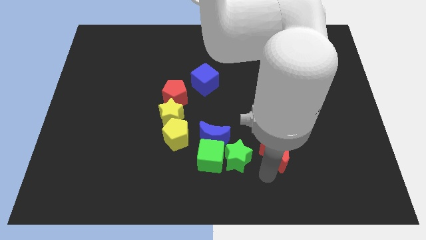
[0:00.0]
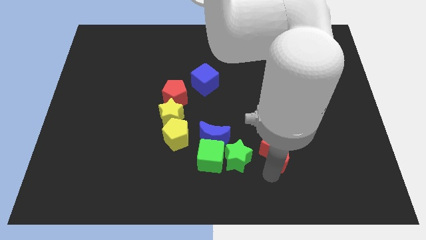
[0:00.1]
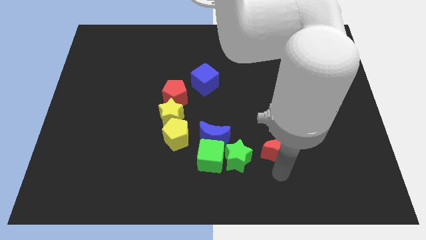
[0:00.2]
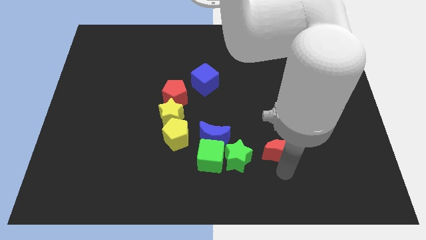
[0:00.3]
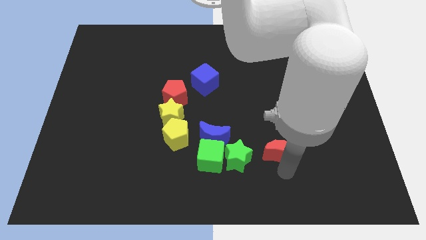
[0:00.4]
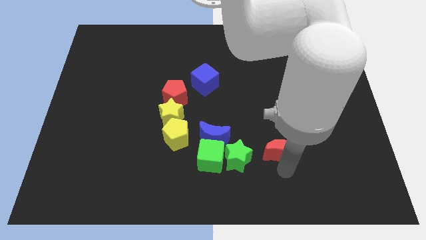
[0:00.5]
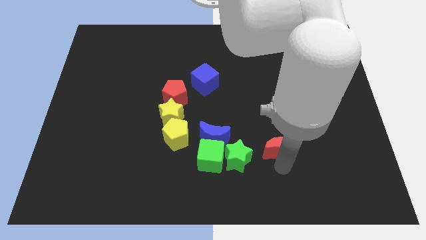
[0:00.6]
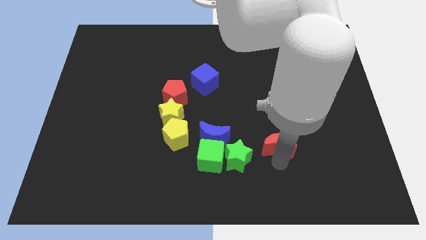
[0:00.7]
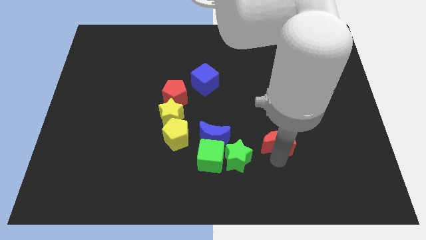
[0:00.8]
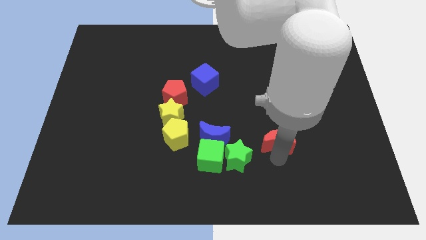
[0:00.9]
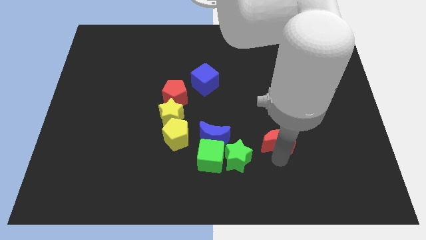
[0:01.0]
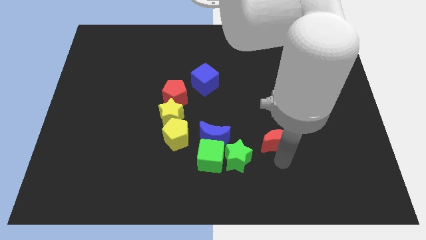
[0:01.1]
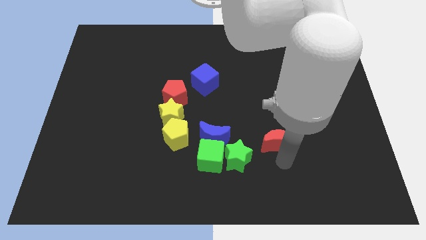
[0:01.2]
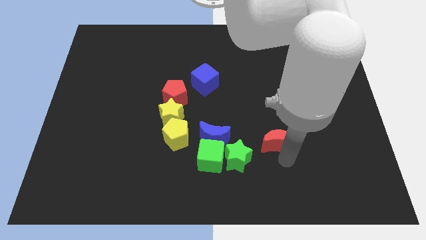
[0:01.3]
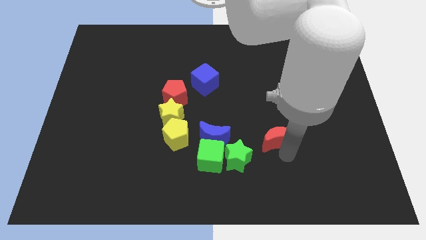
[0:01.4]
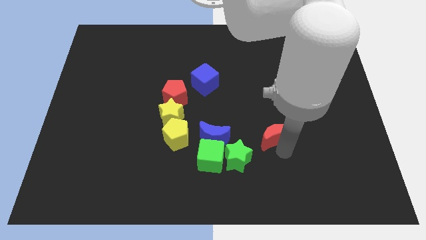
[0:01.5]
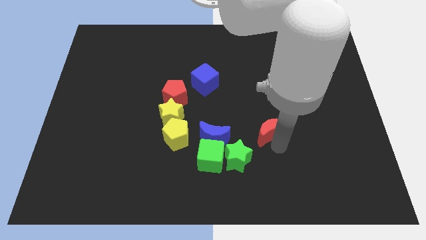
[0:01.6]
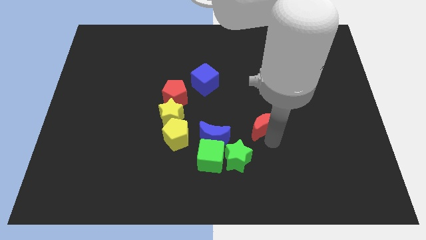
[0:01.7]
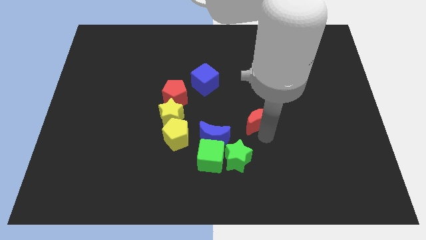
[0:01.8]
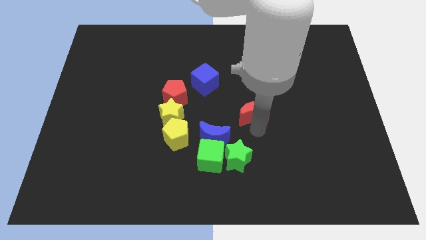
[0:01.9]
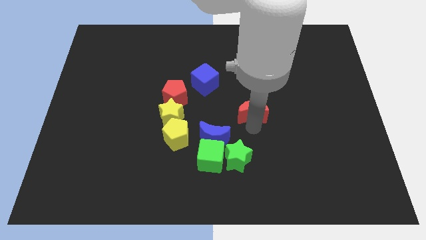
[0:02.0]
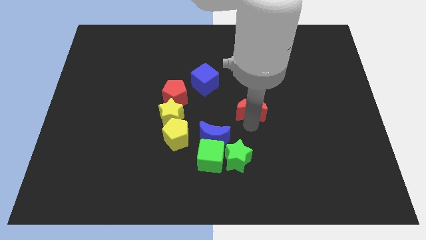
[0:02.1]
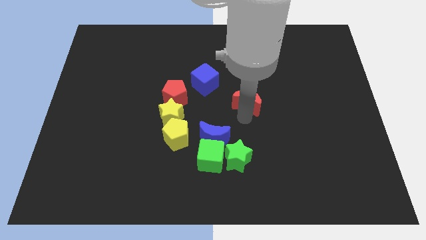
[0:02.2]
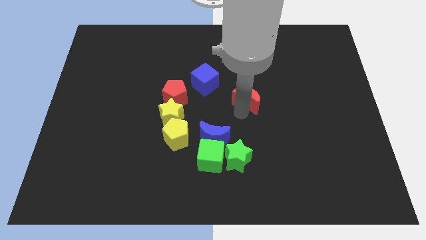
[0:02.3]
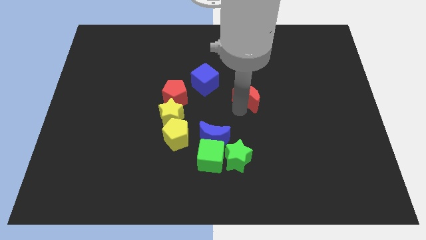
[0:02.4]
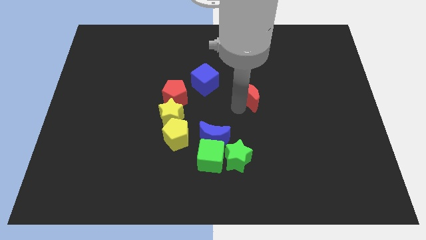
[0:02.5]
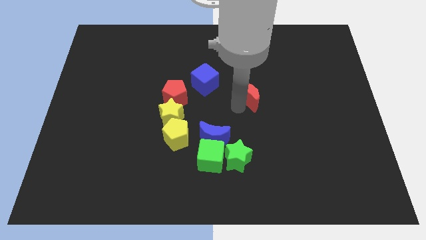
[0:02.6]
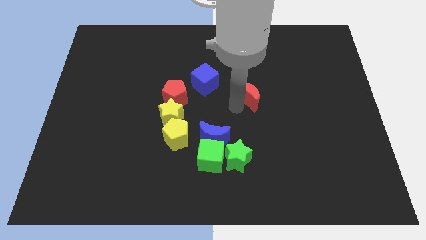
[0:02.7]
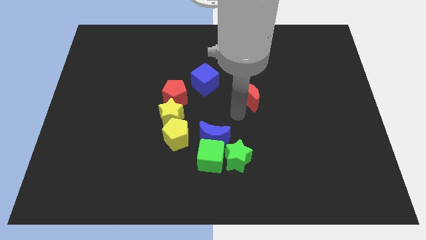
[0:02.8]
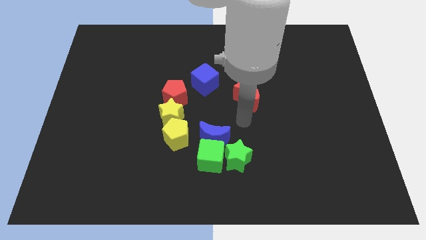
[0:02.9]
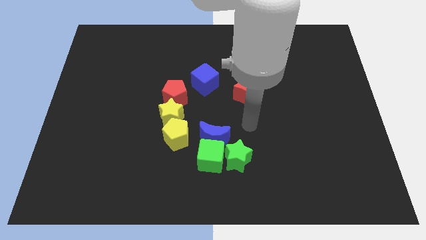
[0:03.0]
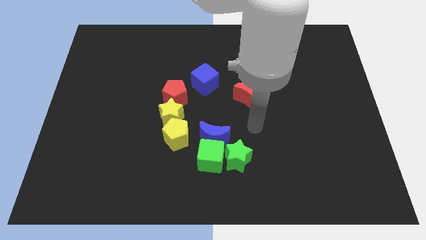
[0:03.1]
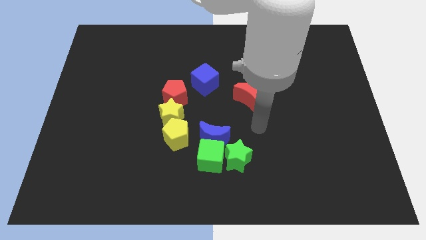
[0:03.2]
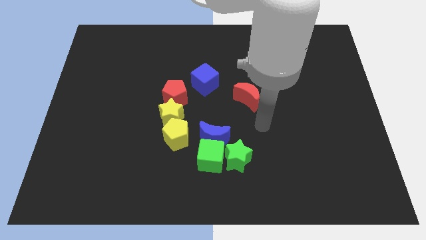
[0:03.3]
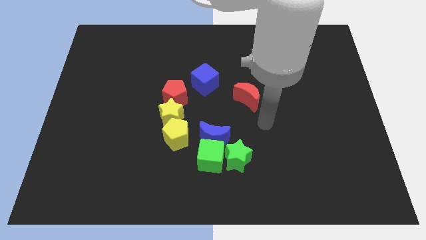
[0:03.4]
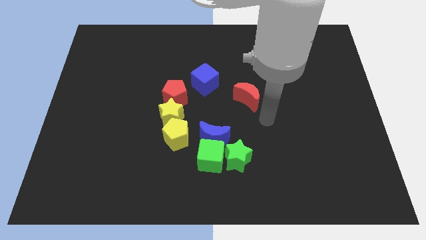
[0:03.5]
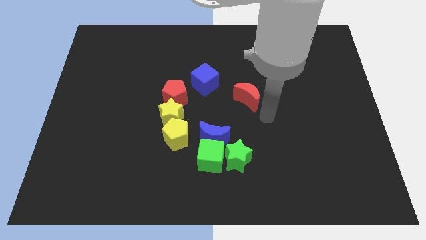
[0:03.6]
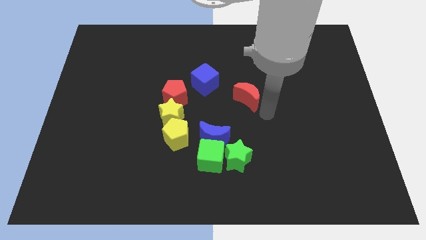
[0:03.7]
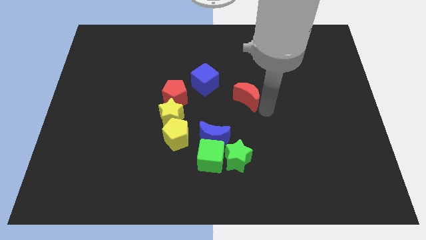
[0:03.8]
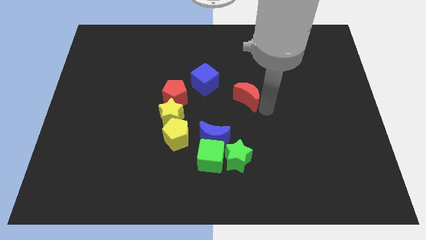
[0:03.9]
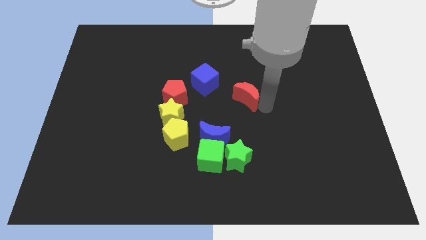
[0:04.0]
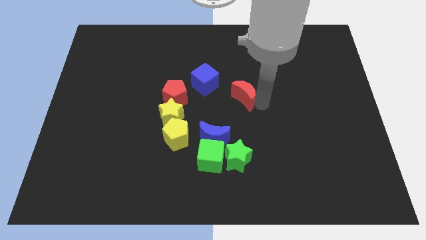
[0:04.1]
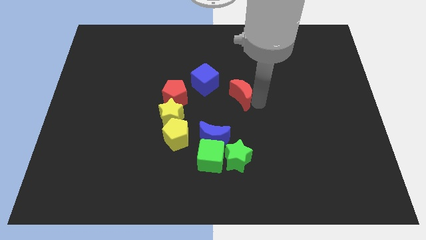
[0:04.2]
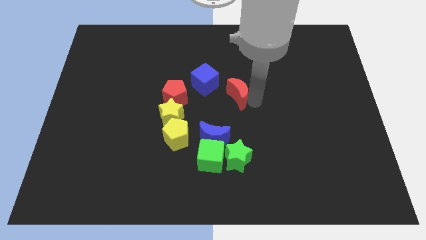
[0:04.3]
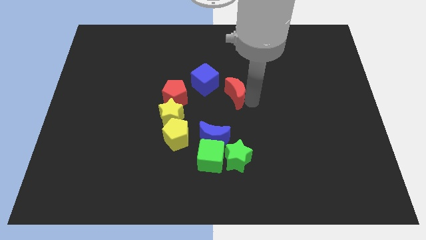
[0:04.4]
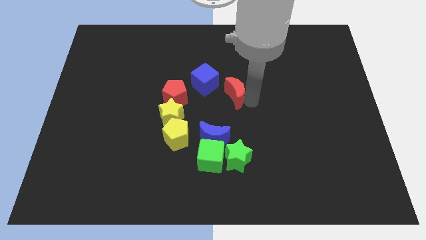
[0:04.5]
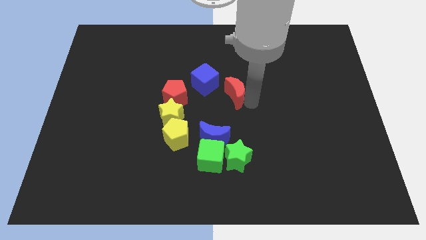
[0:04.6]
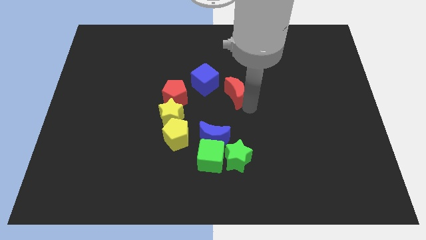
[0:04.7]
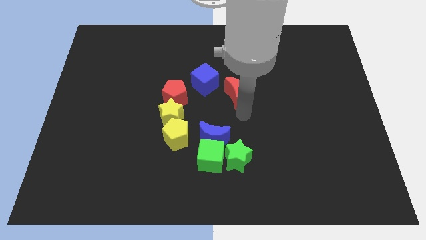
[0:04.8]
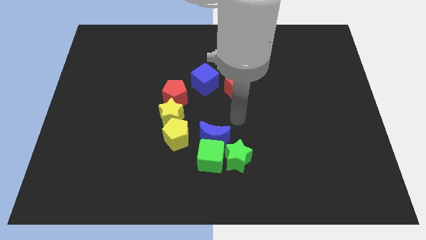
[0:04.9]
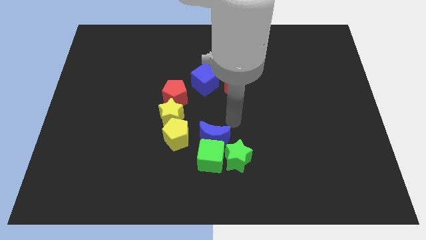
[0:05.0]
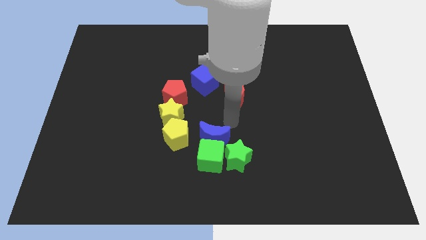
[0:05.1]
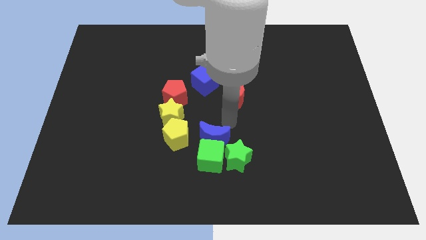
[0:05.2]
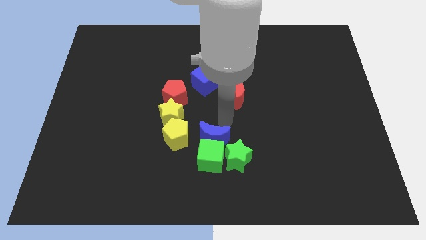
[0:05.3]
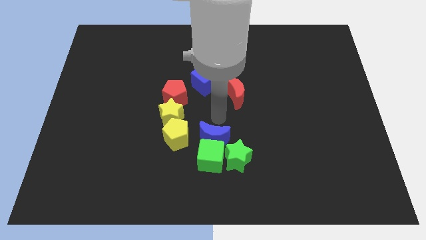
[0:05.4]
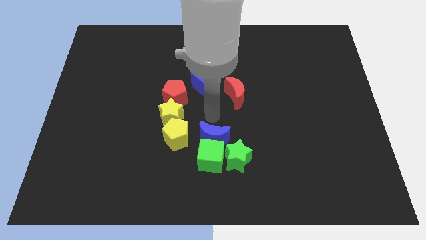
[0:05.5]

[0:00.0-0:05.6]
push the red crescent to the right of the red pentagon

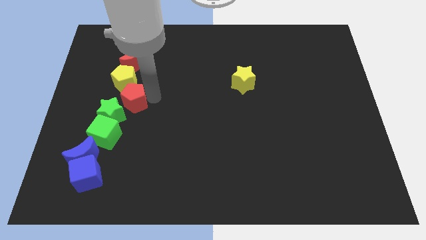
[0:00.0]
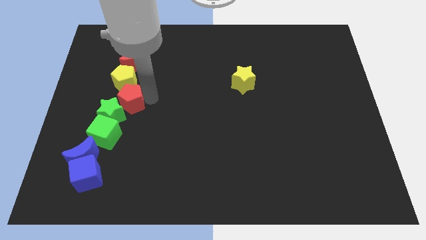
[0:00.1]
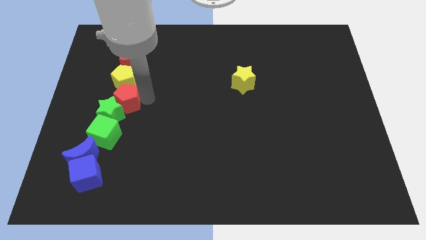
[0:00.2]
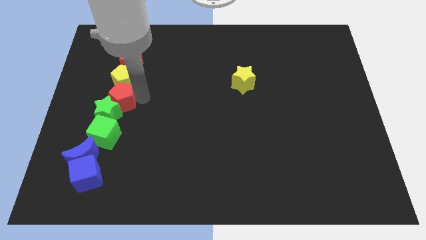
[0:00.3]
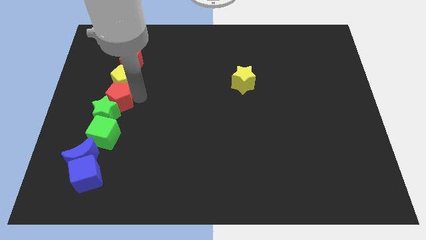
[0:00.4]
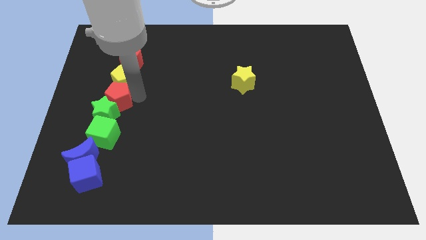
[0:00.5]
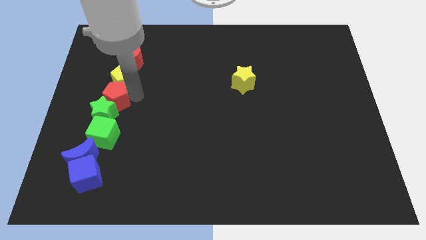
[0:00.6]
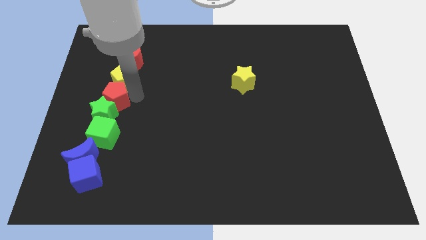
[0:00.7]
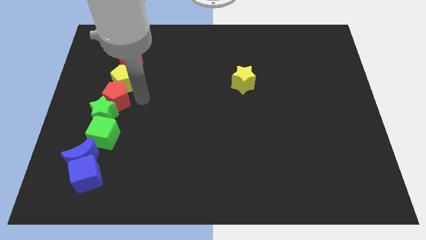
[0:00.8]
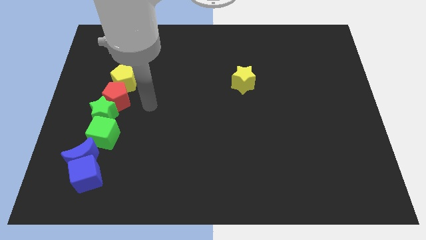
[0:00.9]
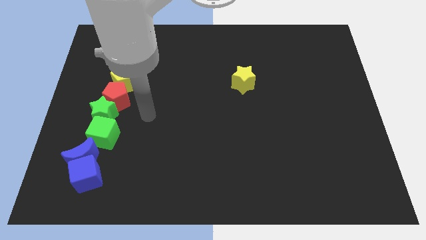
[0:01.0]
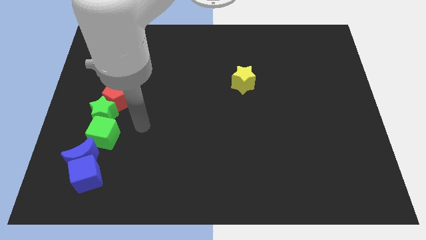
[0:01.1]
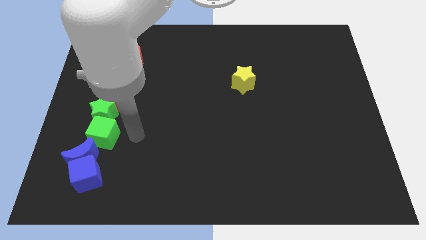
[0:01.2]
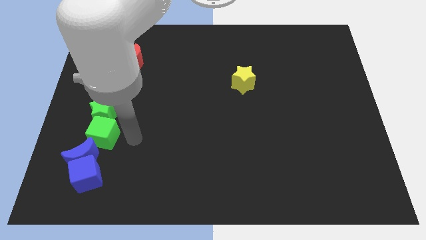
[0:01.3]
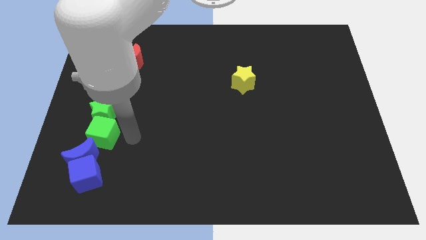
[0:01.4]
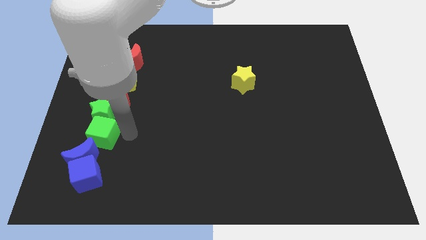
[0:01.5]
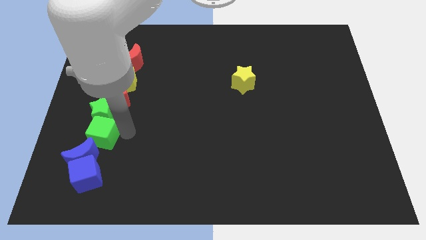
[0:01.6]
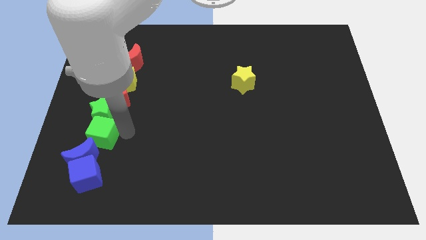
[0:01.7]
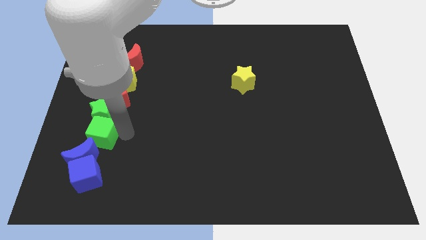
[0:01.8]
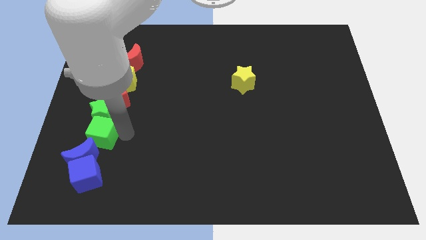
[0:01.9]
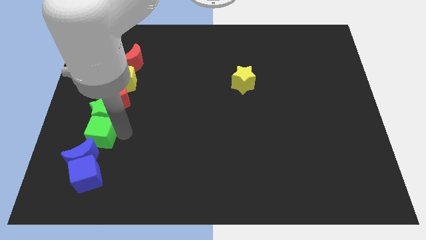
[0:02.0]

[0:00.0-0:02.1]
place the red pentagon below to the yellow pentagon

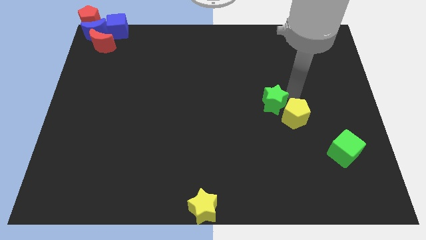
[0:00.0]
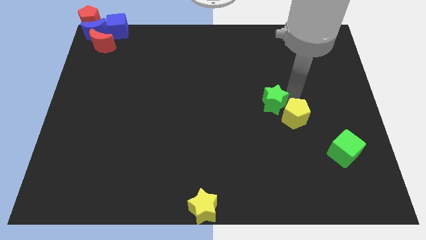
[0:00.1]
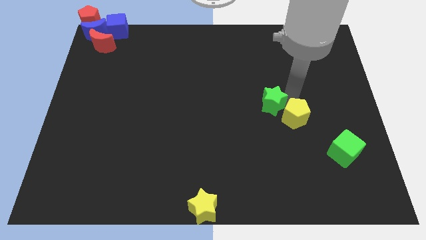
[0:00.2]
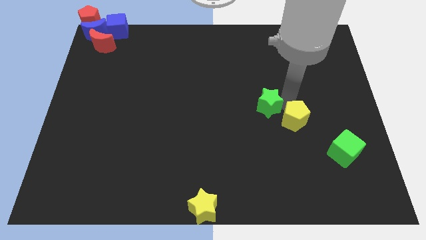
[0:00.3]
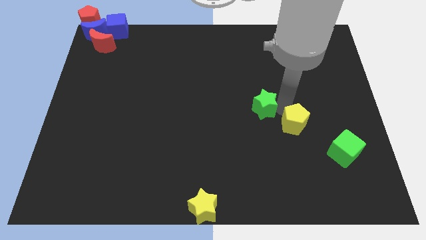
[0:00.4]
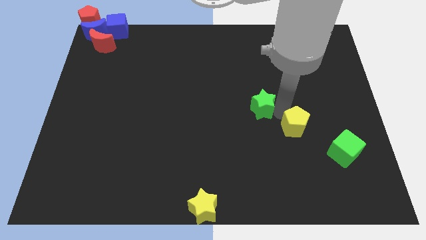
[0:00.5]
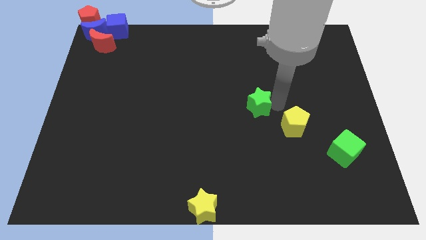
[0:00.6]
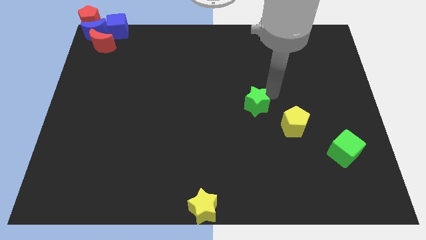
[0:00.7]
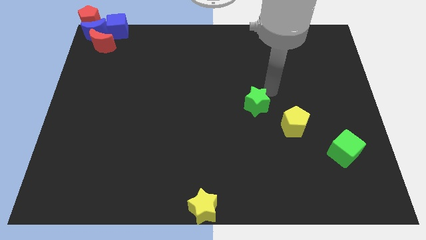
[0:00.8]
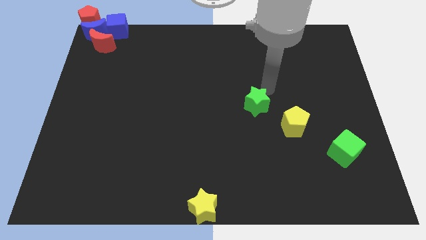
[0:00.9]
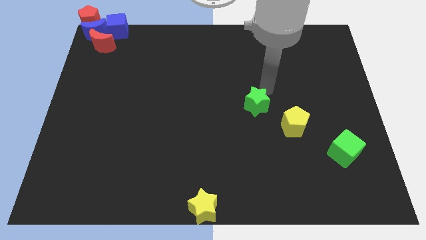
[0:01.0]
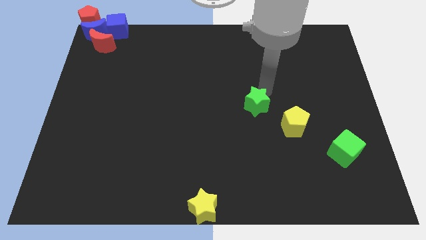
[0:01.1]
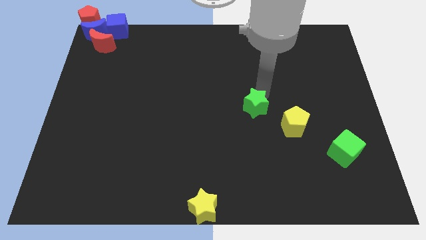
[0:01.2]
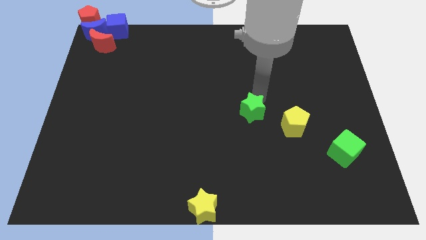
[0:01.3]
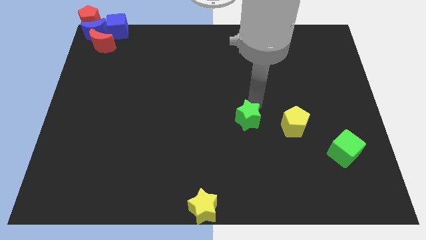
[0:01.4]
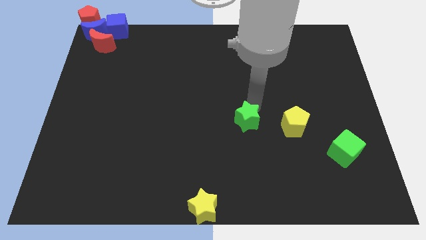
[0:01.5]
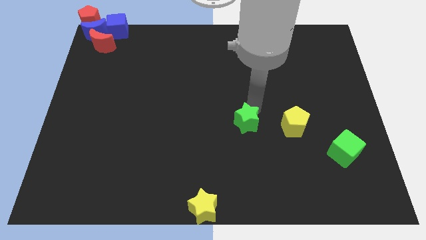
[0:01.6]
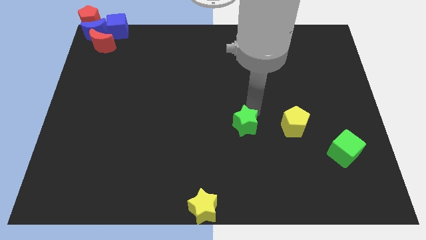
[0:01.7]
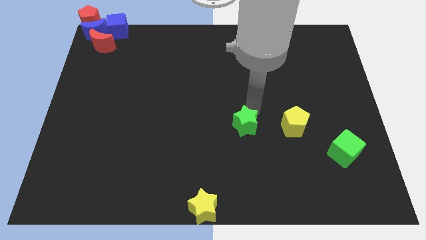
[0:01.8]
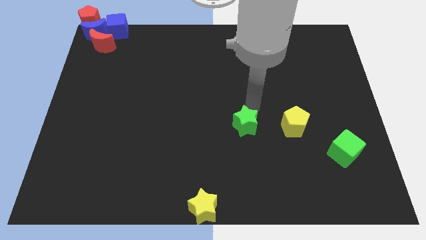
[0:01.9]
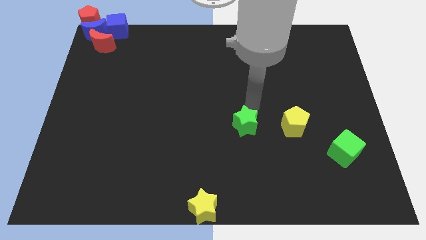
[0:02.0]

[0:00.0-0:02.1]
push the green star to the left side of the yellow pentagon
